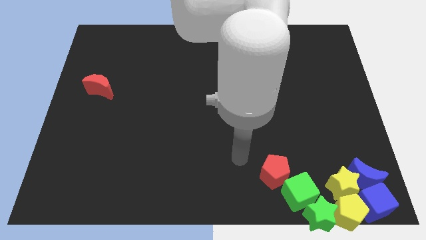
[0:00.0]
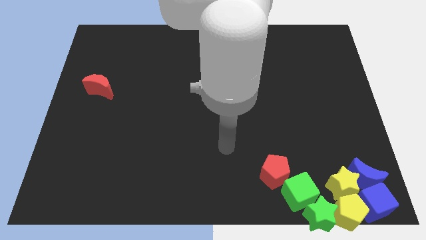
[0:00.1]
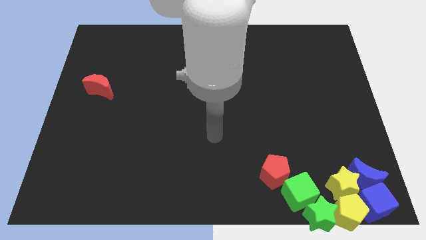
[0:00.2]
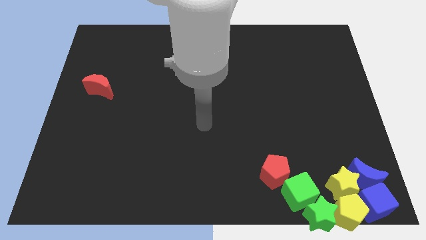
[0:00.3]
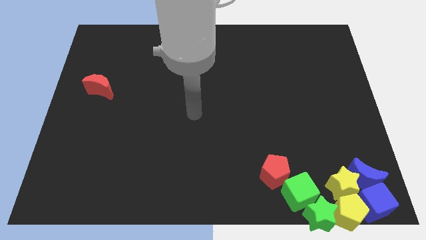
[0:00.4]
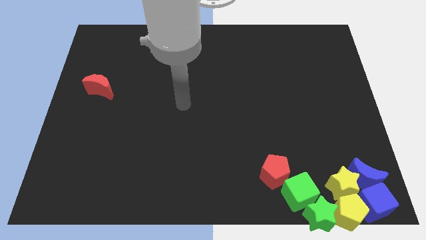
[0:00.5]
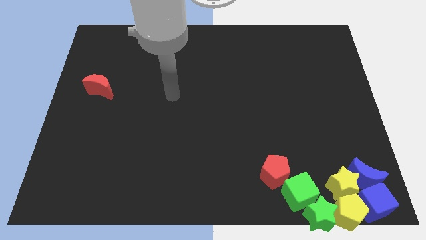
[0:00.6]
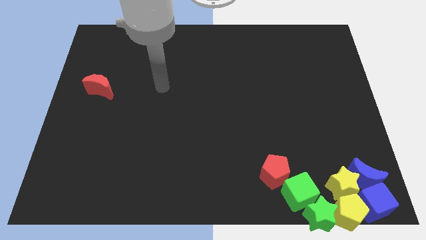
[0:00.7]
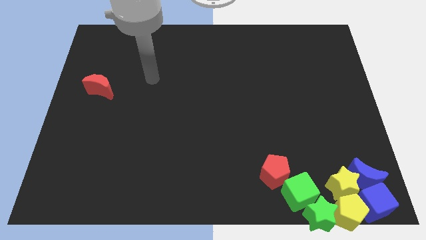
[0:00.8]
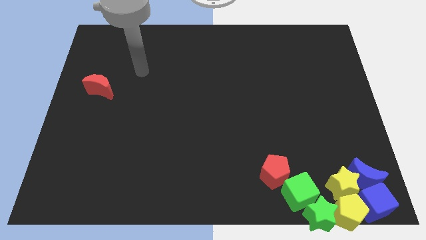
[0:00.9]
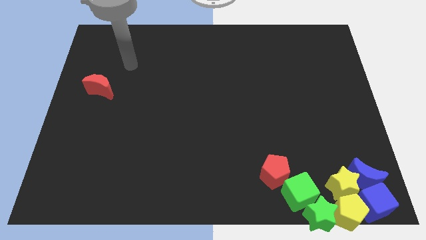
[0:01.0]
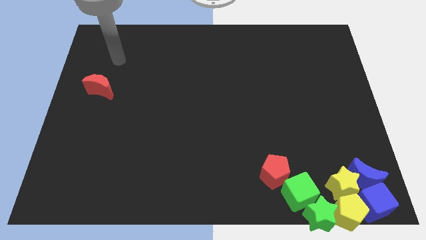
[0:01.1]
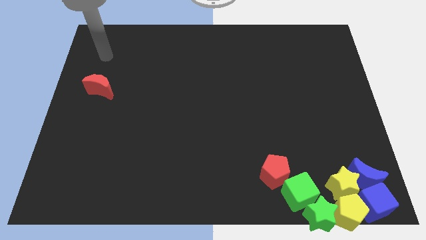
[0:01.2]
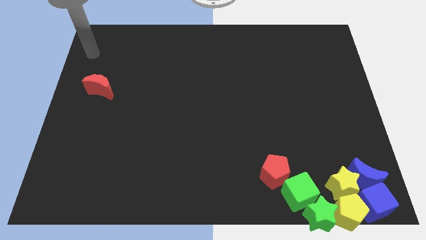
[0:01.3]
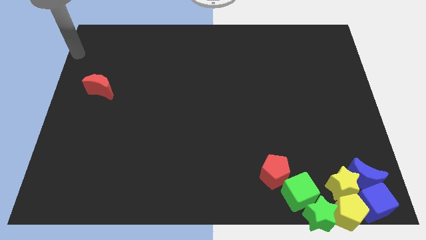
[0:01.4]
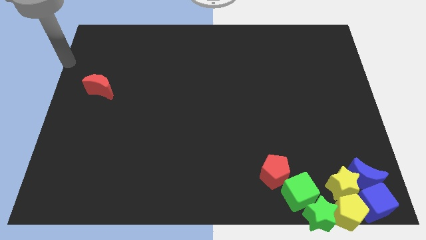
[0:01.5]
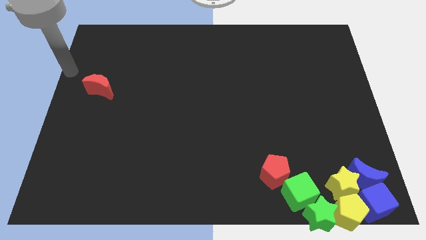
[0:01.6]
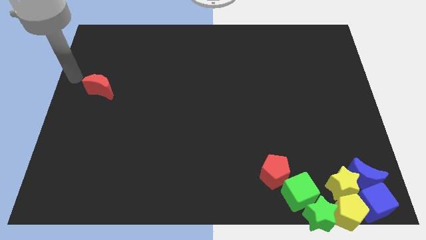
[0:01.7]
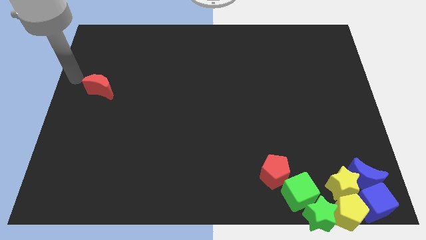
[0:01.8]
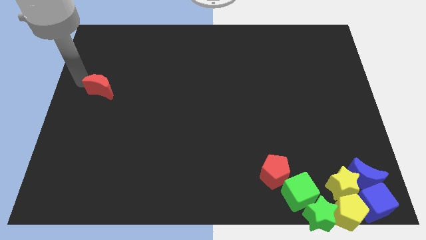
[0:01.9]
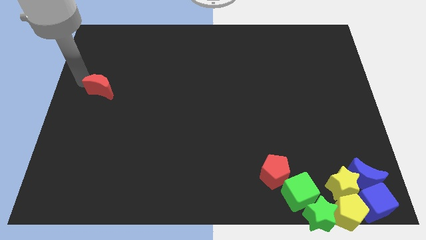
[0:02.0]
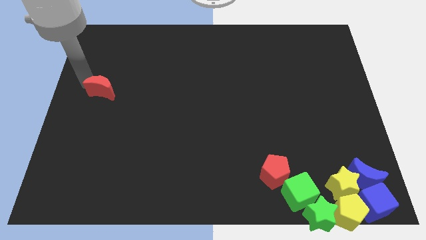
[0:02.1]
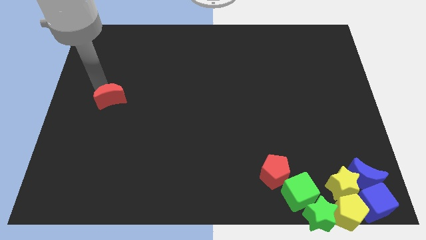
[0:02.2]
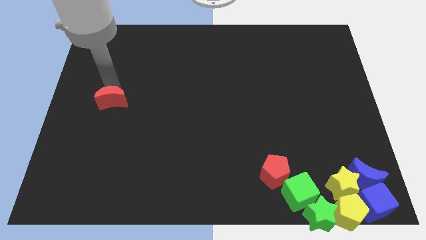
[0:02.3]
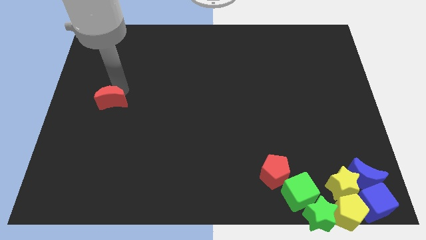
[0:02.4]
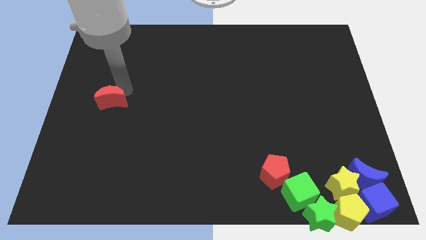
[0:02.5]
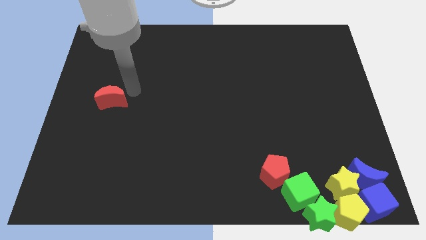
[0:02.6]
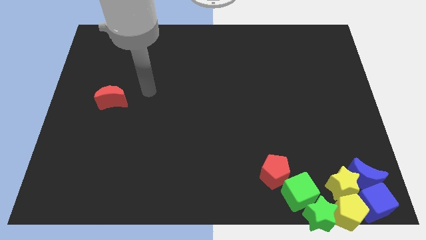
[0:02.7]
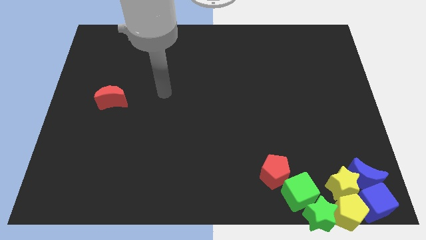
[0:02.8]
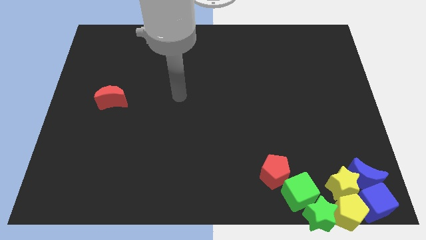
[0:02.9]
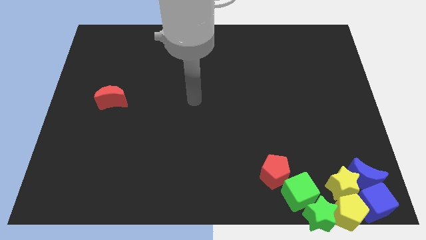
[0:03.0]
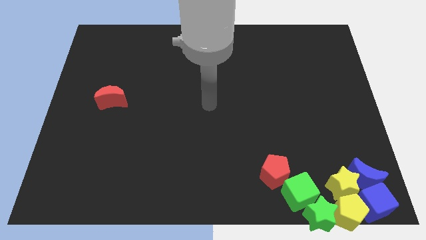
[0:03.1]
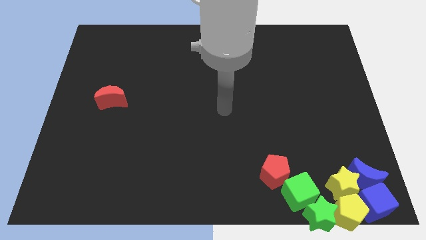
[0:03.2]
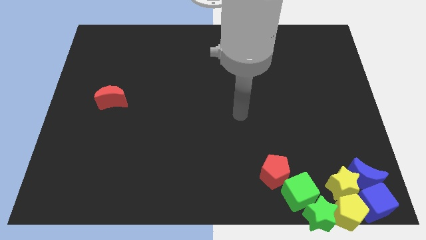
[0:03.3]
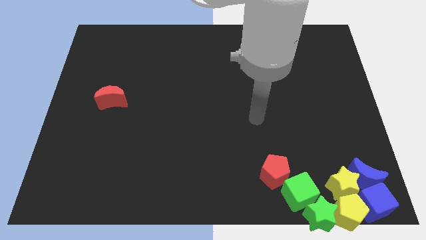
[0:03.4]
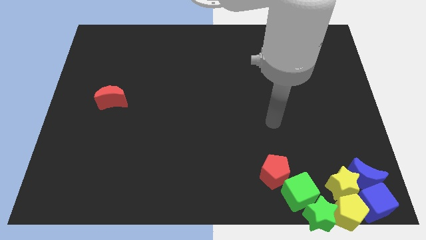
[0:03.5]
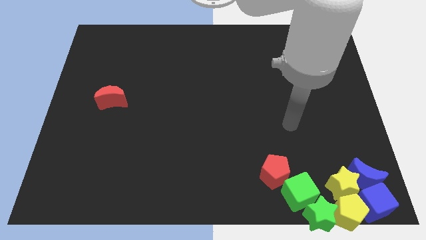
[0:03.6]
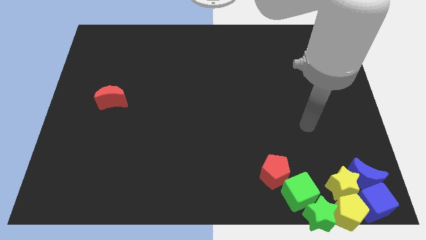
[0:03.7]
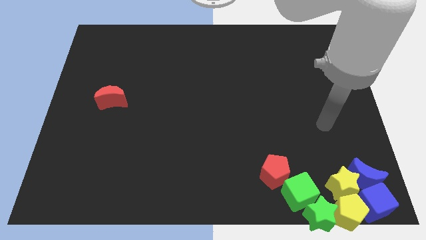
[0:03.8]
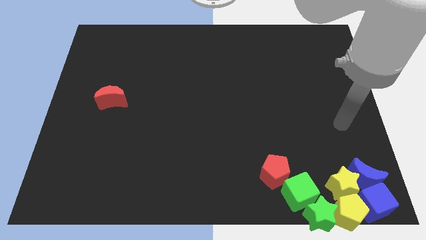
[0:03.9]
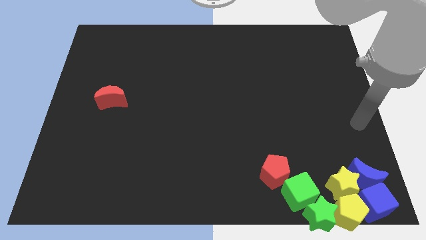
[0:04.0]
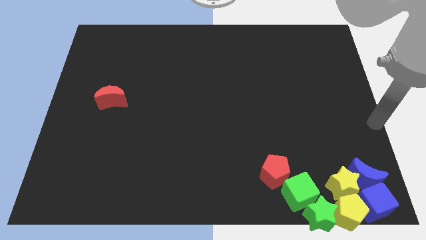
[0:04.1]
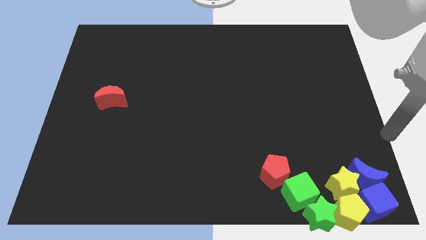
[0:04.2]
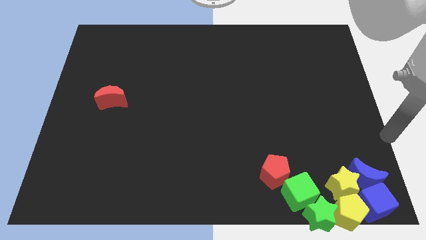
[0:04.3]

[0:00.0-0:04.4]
push the red crescent slightly towards down

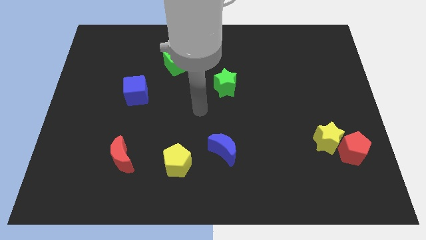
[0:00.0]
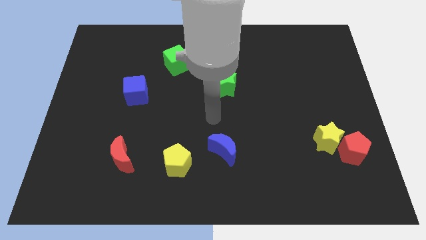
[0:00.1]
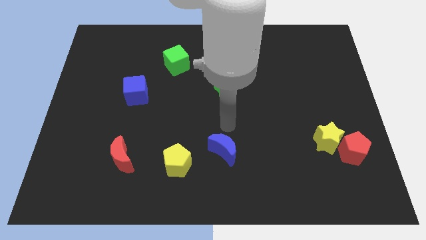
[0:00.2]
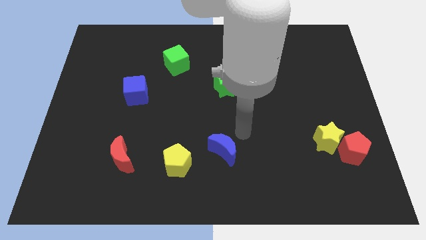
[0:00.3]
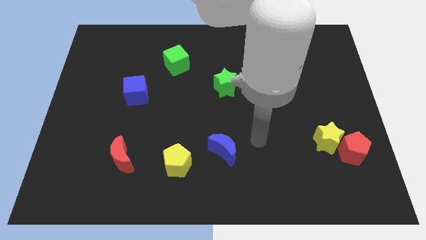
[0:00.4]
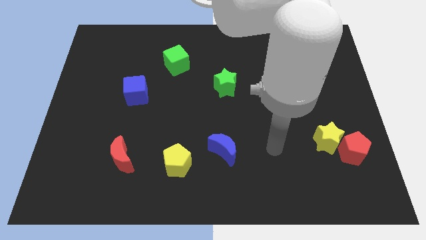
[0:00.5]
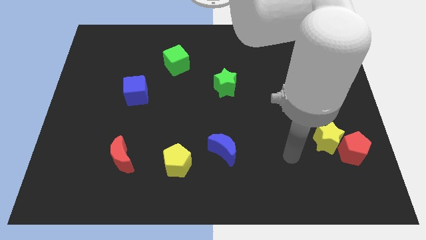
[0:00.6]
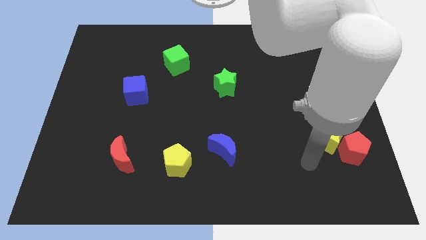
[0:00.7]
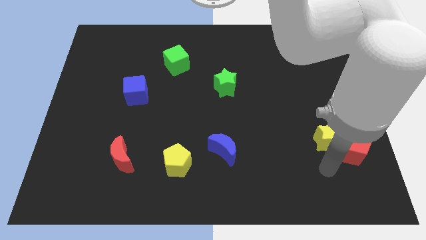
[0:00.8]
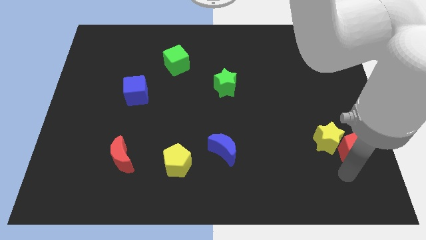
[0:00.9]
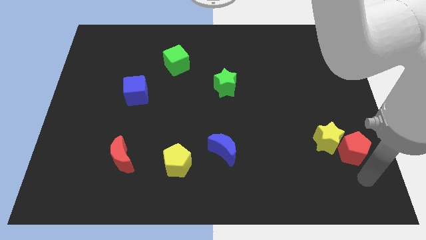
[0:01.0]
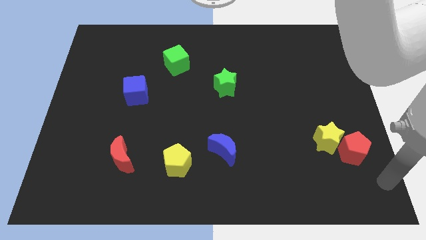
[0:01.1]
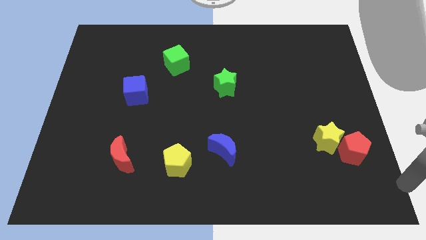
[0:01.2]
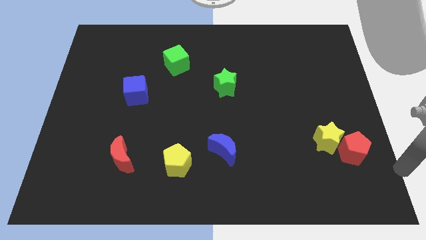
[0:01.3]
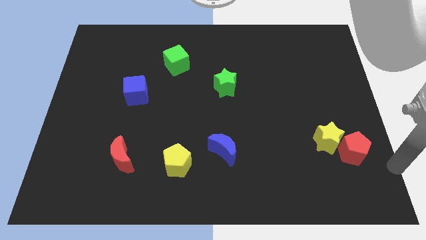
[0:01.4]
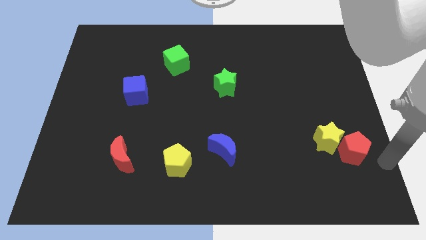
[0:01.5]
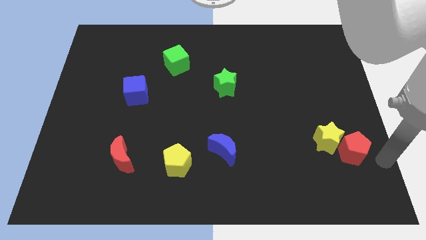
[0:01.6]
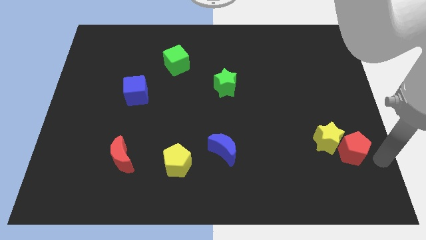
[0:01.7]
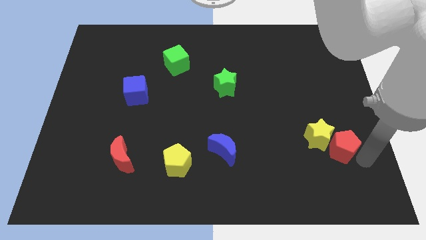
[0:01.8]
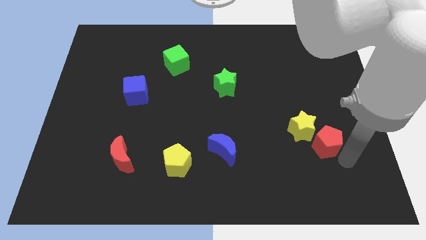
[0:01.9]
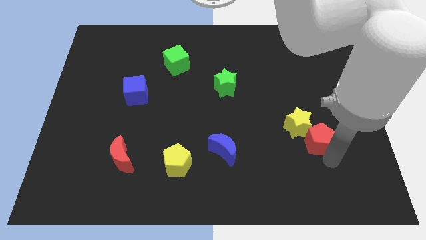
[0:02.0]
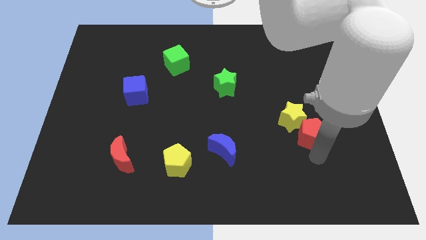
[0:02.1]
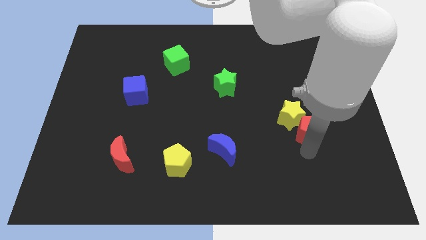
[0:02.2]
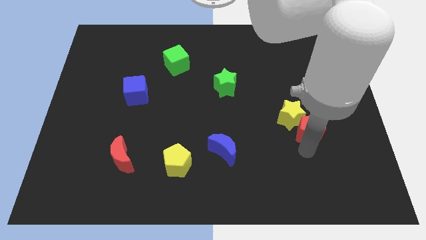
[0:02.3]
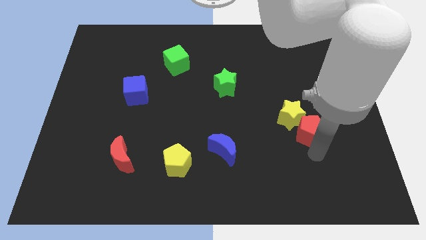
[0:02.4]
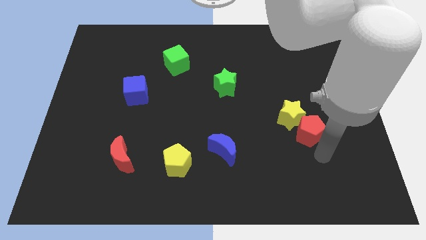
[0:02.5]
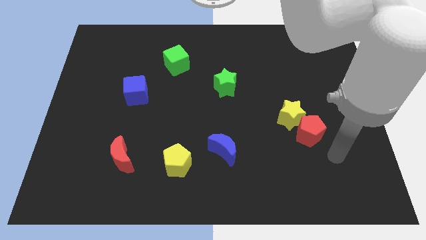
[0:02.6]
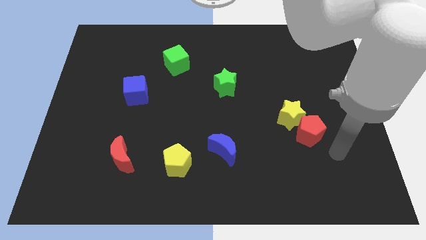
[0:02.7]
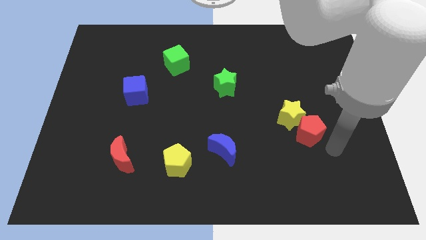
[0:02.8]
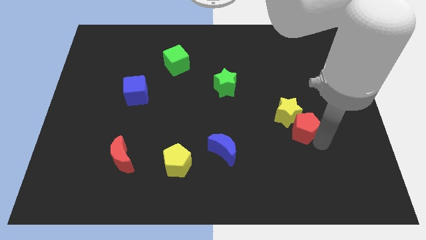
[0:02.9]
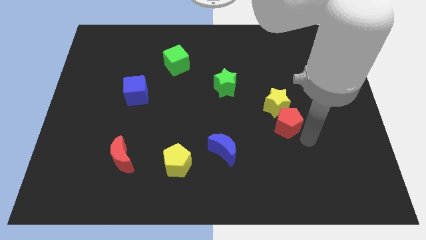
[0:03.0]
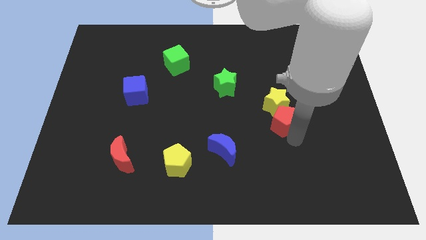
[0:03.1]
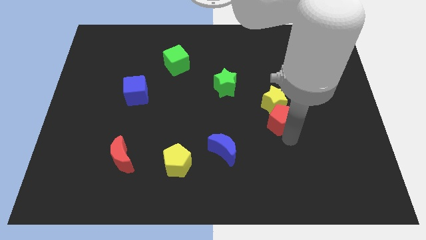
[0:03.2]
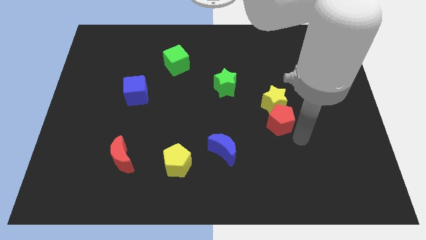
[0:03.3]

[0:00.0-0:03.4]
slide the red pentagon and yellow star diagonally on the top right side of the blue crescent

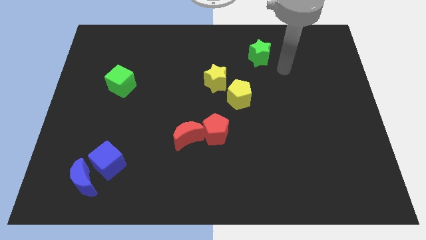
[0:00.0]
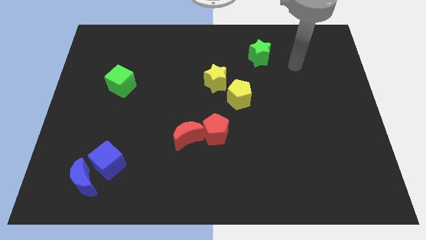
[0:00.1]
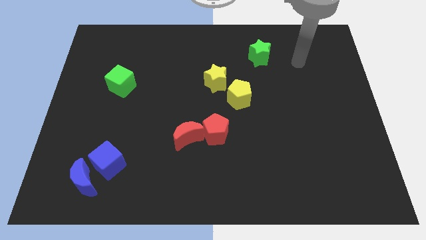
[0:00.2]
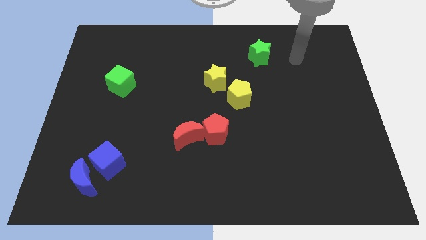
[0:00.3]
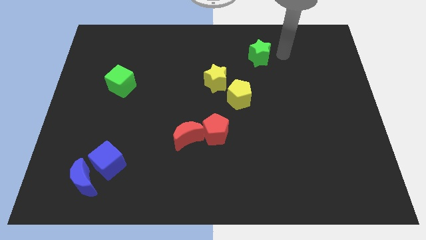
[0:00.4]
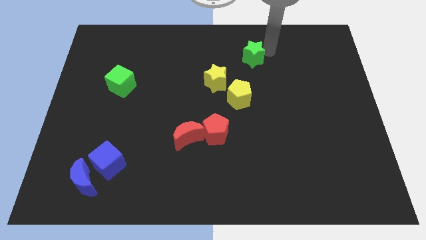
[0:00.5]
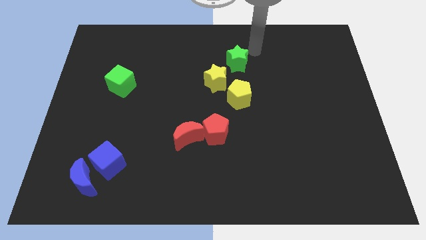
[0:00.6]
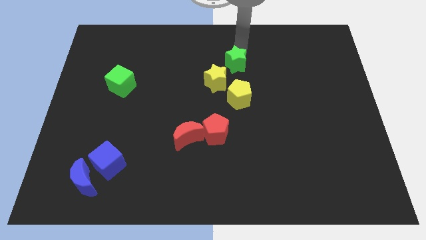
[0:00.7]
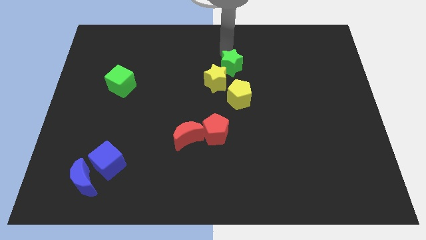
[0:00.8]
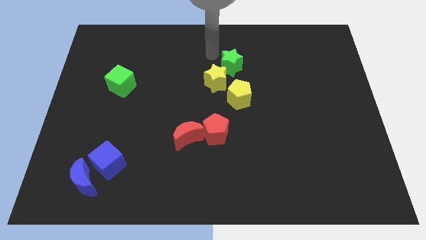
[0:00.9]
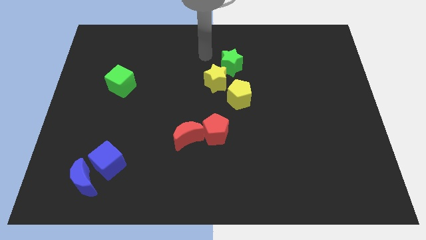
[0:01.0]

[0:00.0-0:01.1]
move the green star close to the top right of the yellow star
